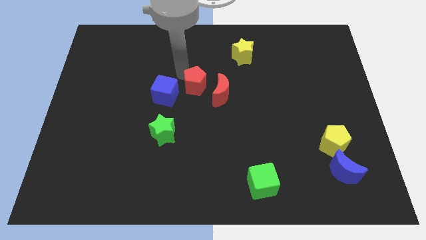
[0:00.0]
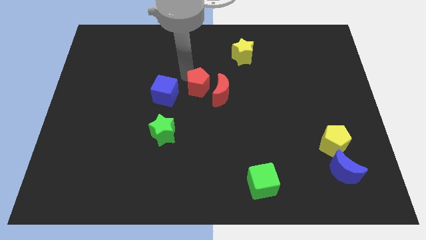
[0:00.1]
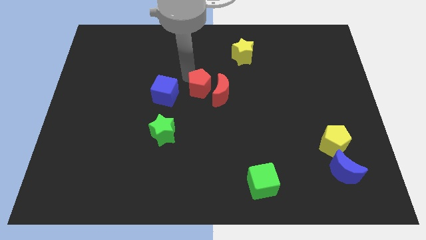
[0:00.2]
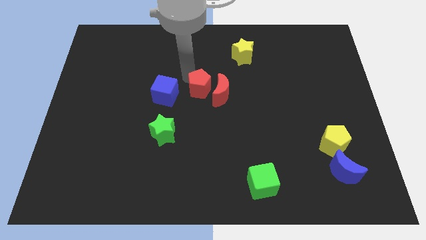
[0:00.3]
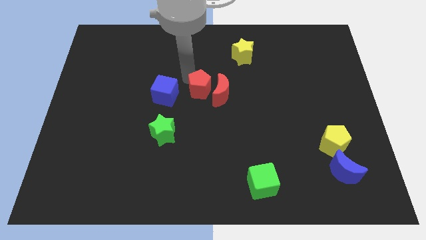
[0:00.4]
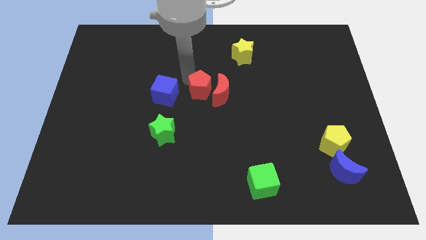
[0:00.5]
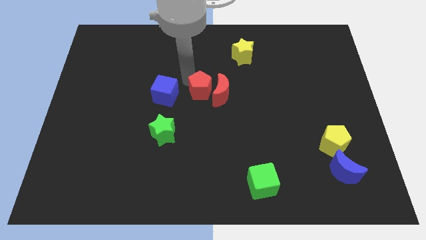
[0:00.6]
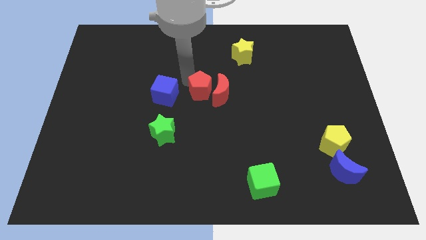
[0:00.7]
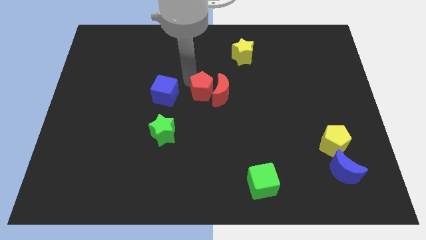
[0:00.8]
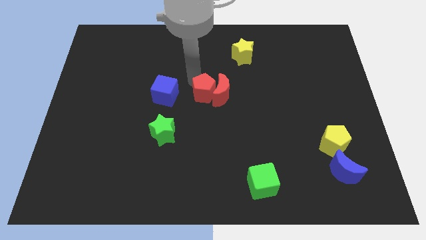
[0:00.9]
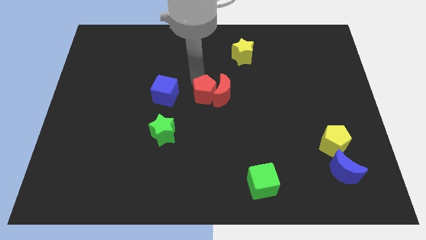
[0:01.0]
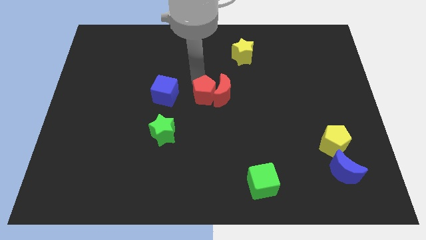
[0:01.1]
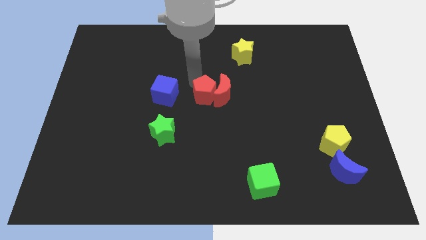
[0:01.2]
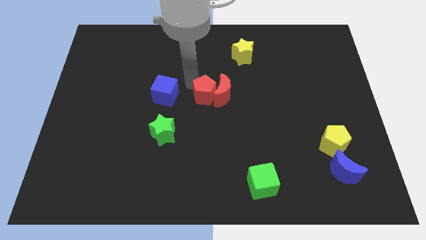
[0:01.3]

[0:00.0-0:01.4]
push the red pentagon to the left of the red crescent on the board

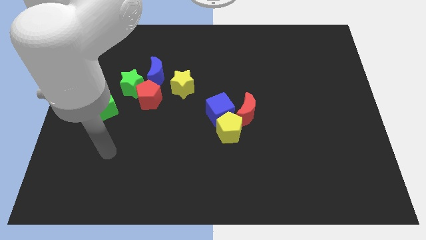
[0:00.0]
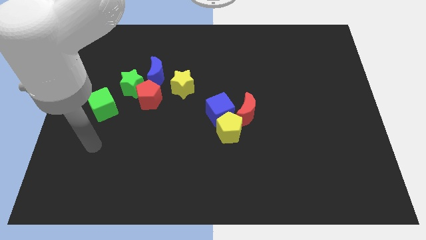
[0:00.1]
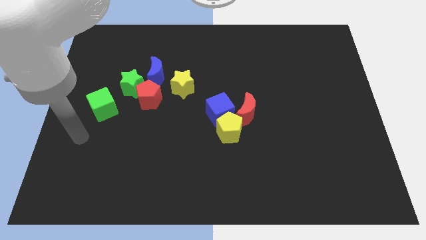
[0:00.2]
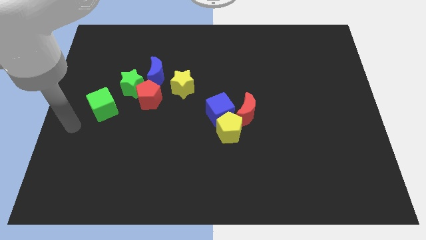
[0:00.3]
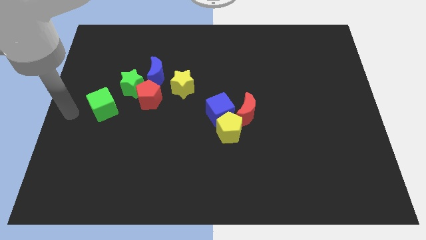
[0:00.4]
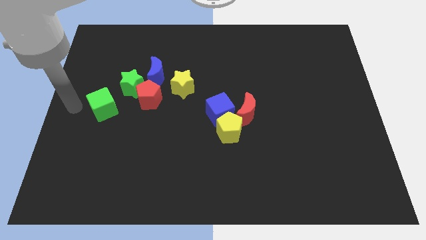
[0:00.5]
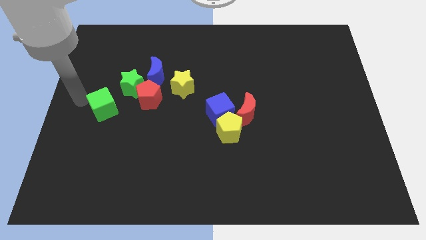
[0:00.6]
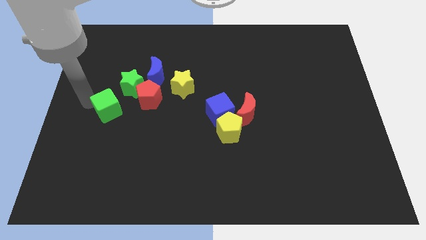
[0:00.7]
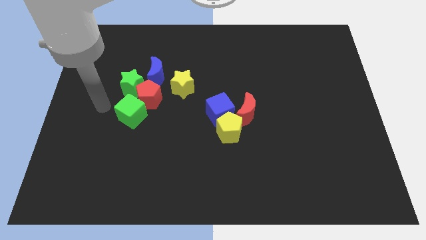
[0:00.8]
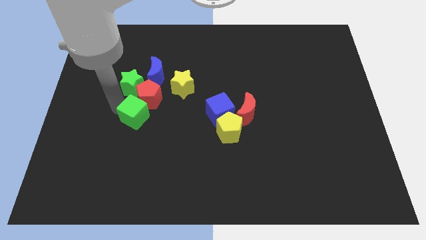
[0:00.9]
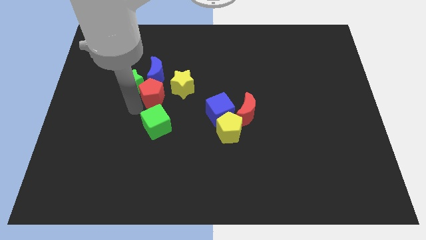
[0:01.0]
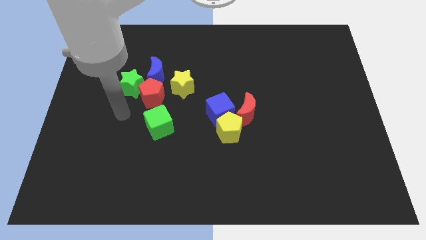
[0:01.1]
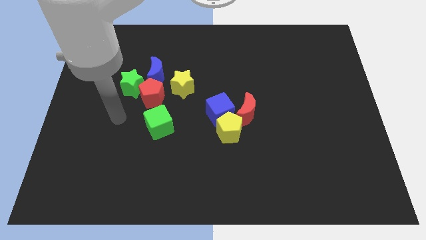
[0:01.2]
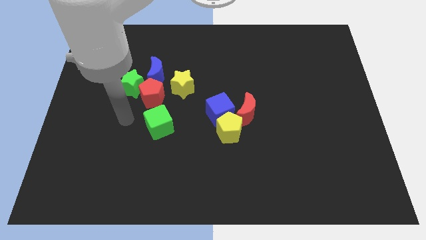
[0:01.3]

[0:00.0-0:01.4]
push the green cube to the bottom side of the red pentagon

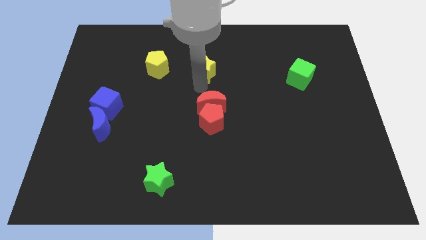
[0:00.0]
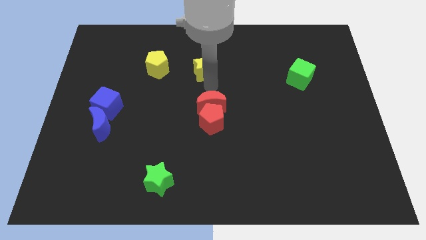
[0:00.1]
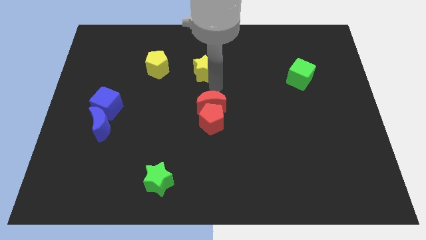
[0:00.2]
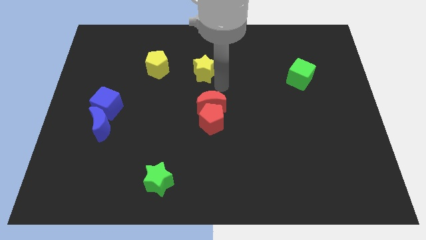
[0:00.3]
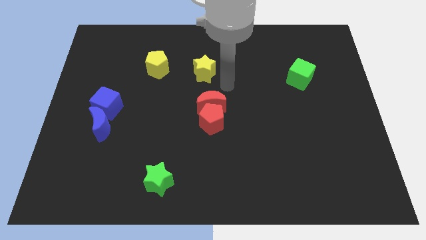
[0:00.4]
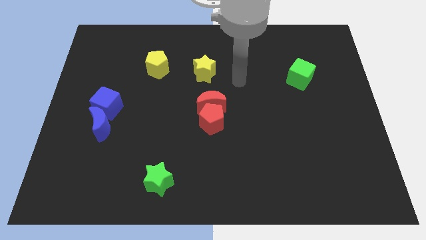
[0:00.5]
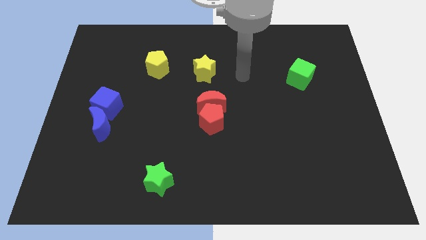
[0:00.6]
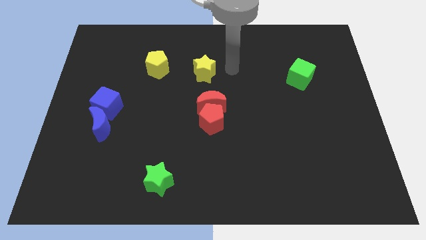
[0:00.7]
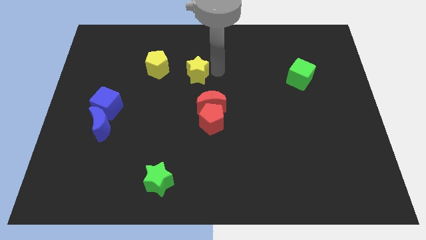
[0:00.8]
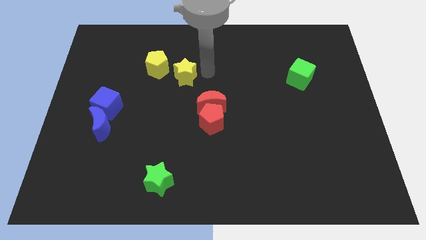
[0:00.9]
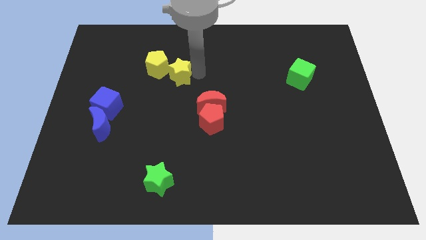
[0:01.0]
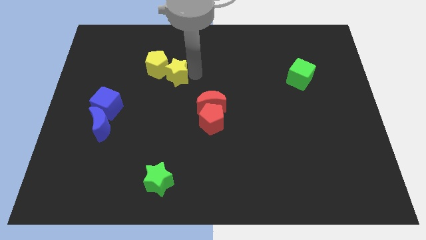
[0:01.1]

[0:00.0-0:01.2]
push yellow star into yellow pentagon

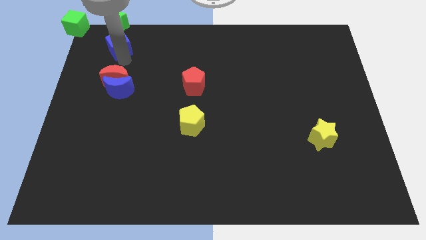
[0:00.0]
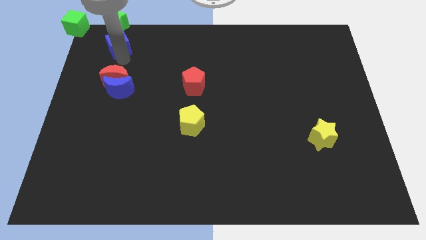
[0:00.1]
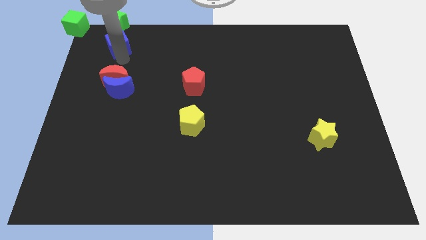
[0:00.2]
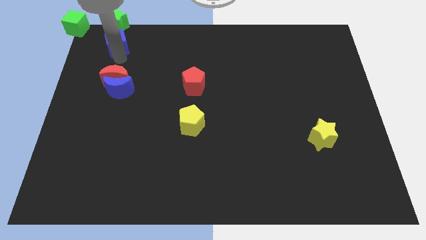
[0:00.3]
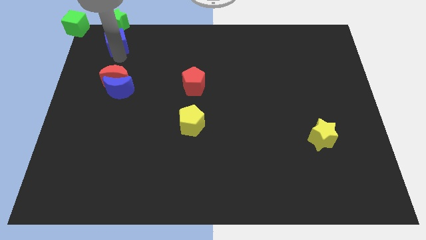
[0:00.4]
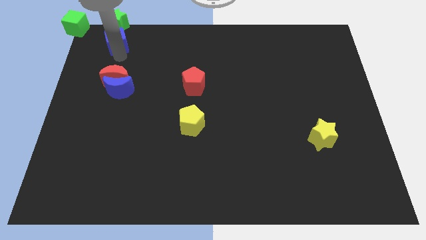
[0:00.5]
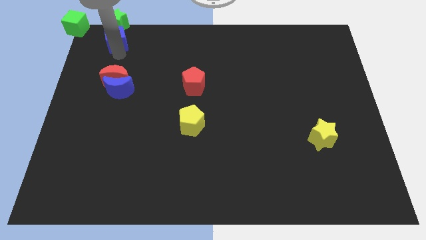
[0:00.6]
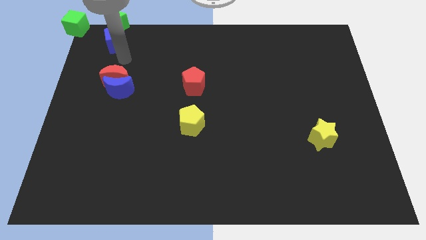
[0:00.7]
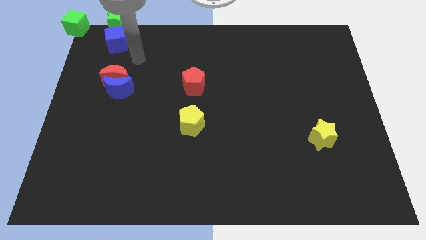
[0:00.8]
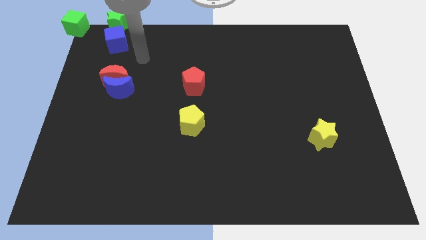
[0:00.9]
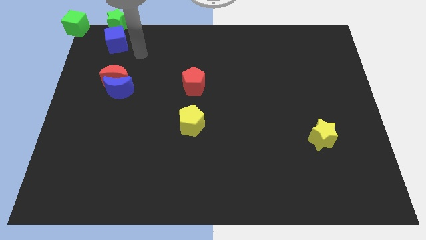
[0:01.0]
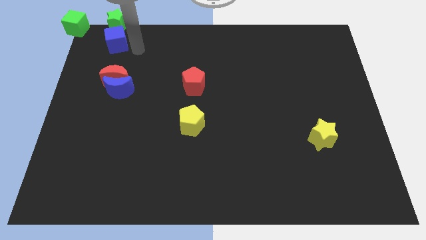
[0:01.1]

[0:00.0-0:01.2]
place blue cube below green star

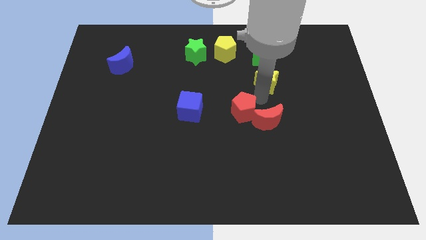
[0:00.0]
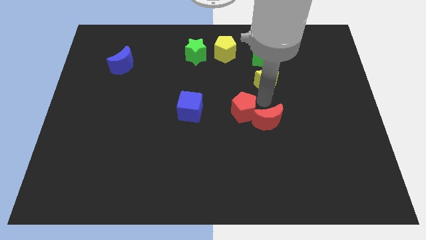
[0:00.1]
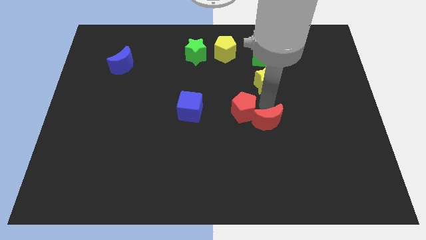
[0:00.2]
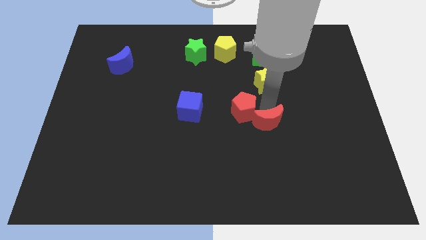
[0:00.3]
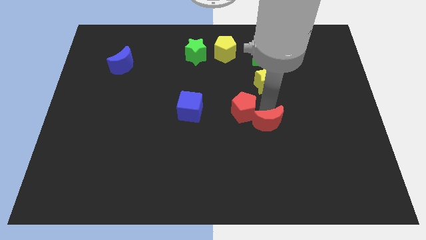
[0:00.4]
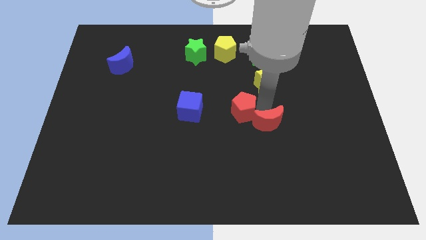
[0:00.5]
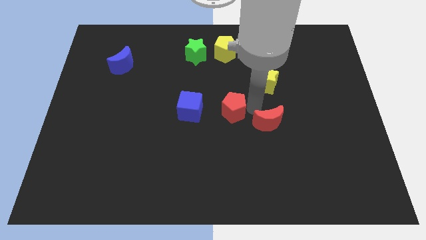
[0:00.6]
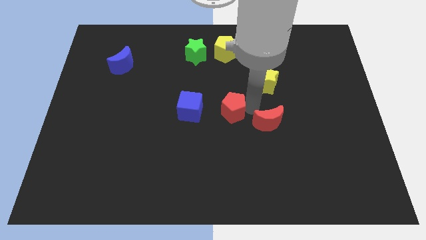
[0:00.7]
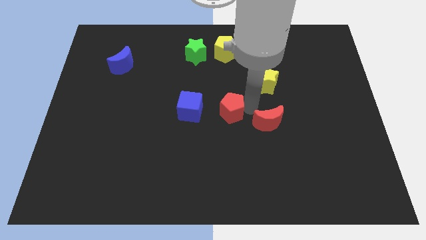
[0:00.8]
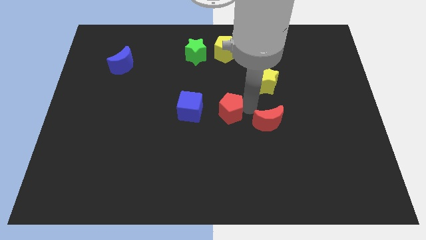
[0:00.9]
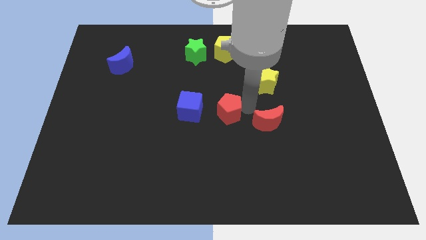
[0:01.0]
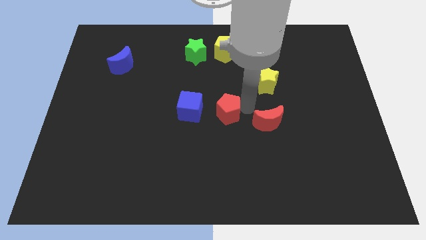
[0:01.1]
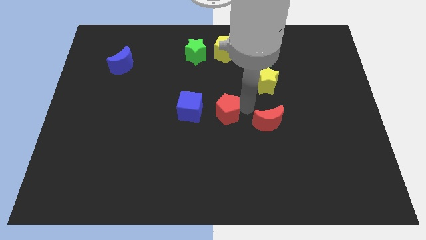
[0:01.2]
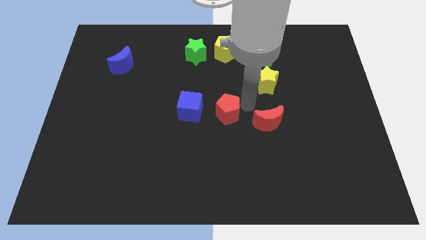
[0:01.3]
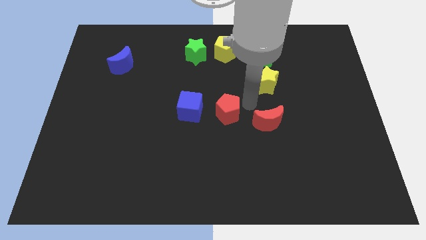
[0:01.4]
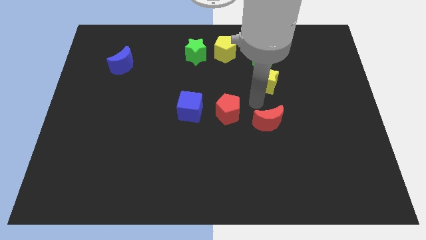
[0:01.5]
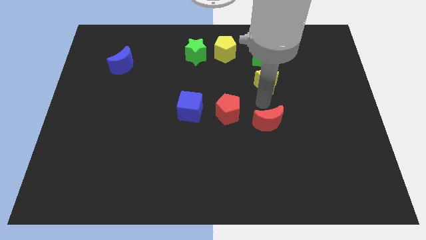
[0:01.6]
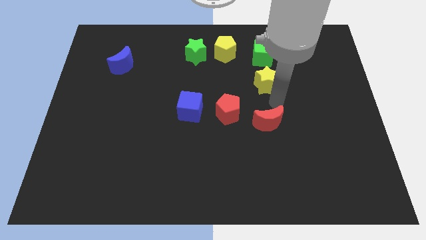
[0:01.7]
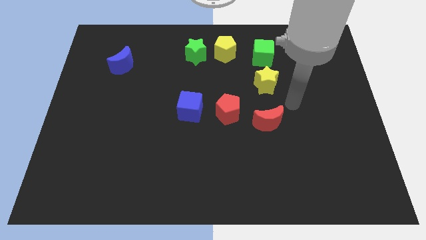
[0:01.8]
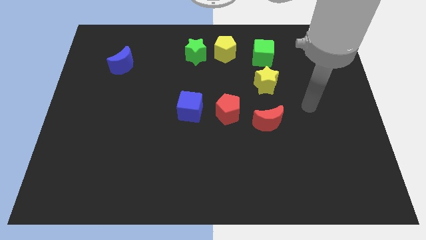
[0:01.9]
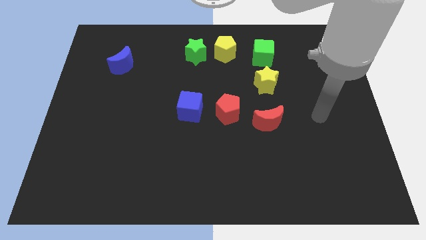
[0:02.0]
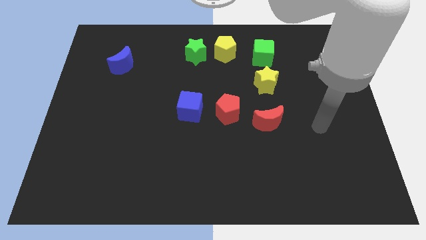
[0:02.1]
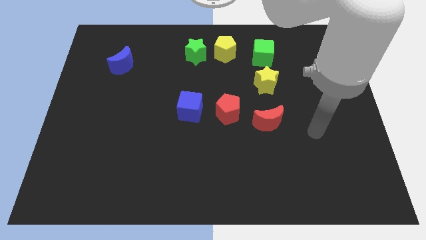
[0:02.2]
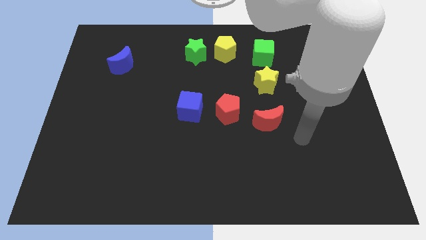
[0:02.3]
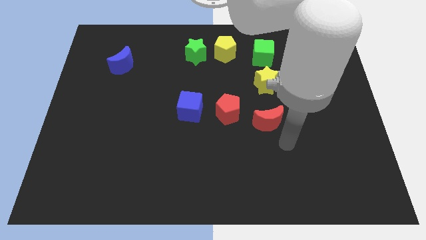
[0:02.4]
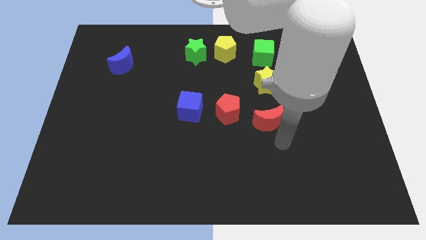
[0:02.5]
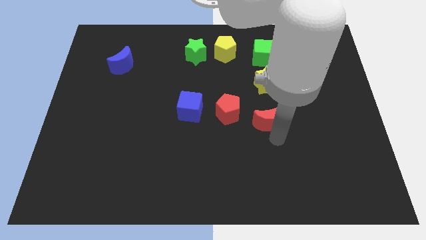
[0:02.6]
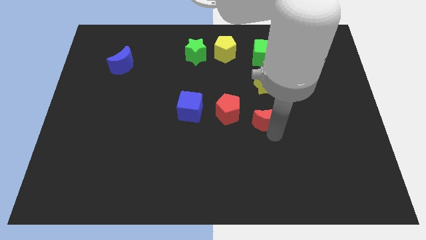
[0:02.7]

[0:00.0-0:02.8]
push the red pentagon below the yellow pentagon

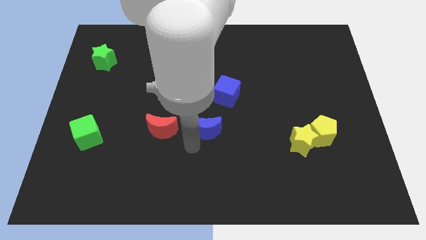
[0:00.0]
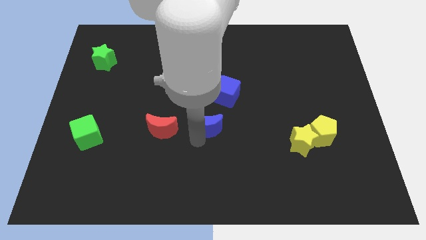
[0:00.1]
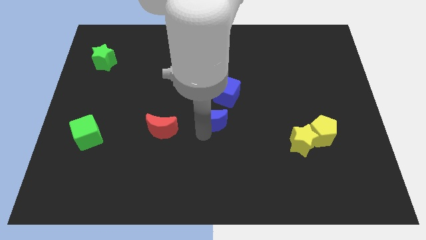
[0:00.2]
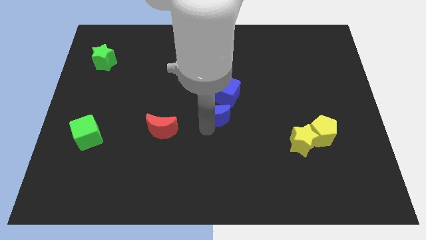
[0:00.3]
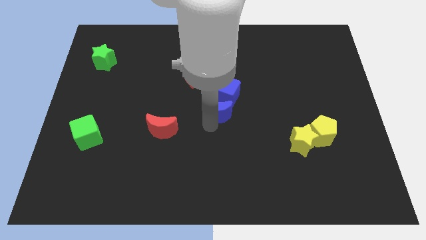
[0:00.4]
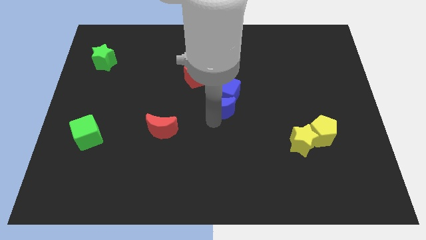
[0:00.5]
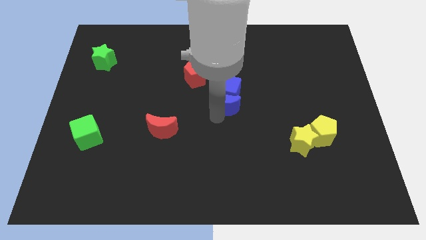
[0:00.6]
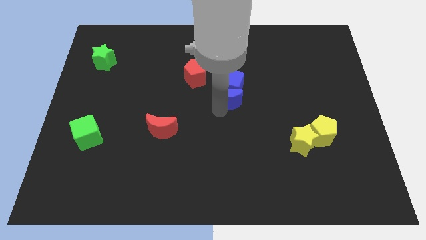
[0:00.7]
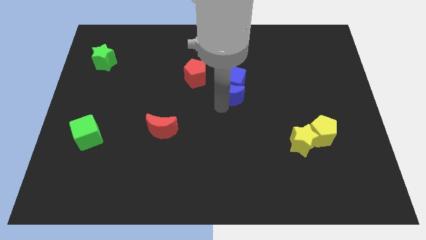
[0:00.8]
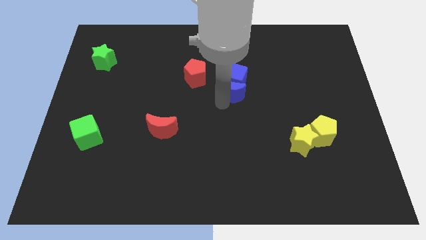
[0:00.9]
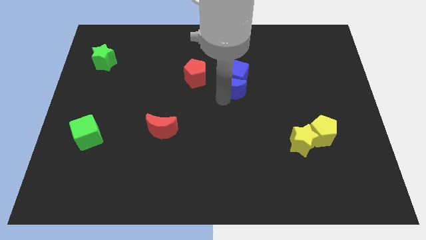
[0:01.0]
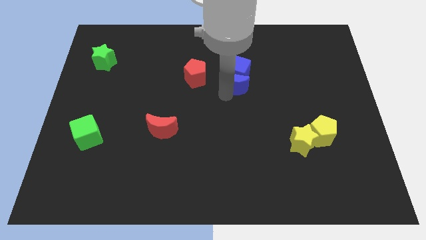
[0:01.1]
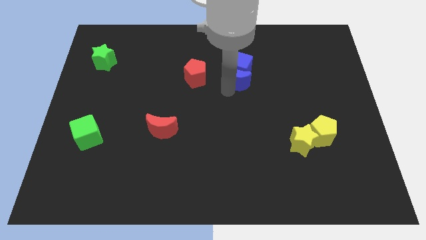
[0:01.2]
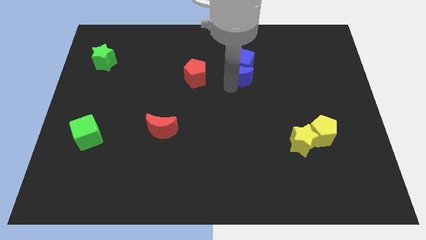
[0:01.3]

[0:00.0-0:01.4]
push the blue moon into the blue cube
